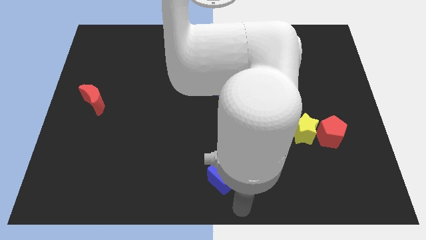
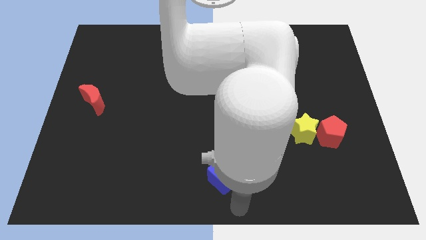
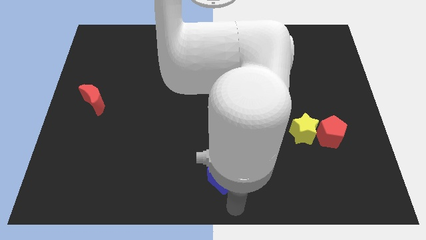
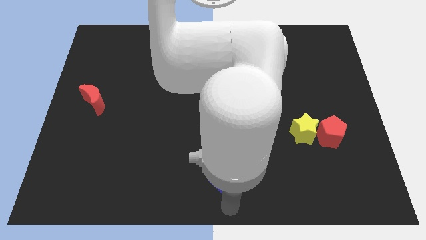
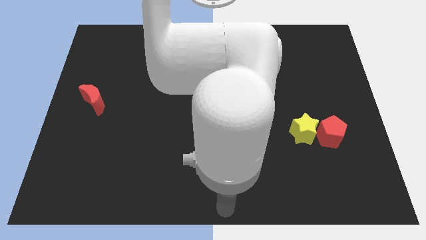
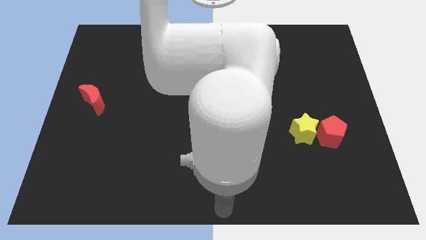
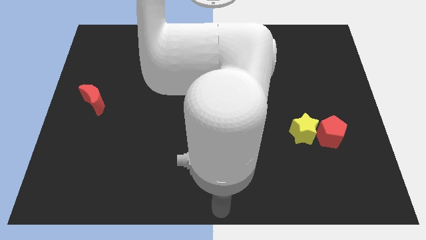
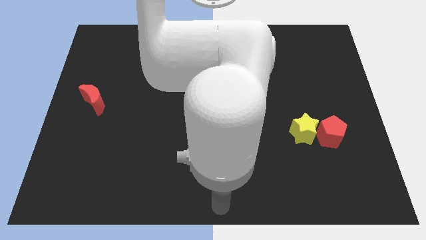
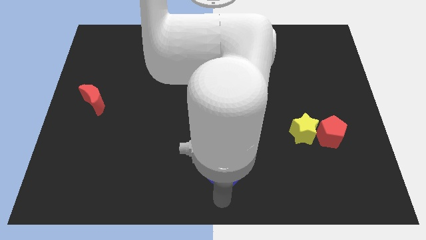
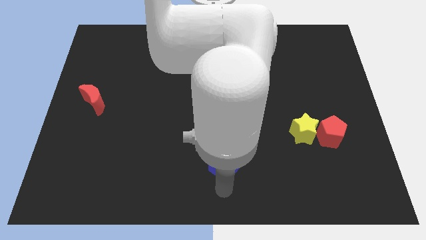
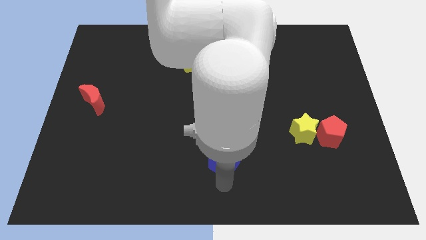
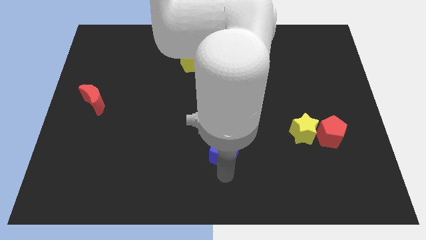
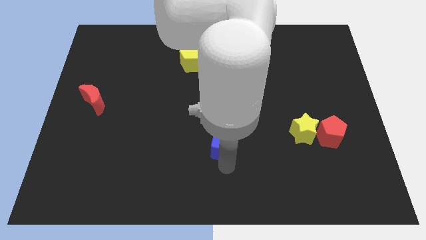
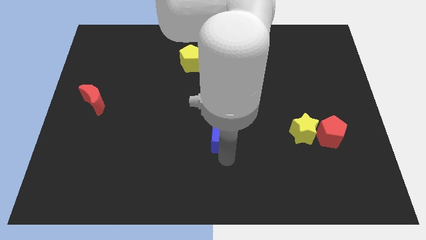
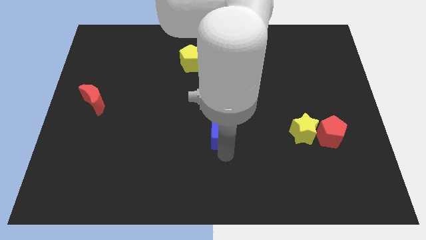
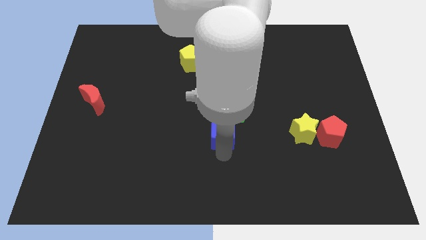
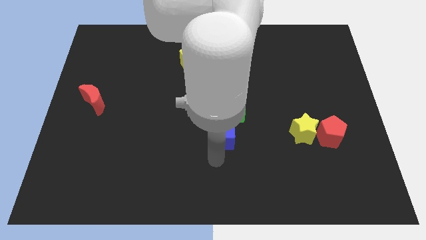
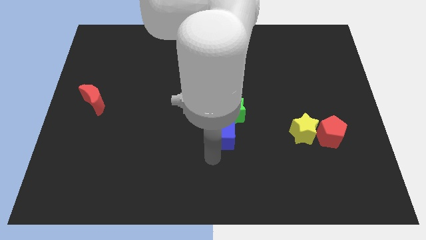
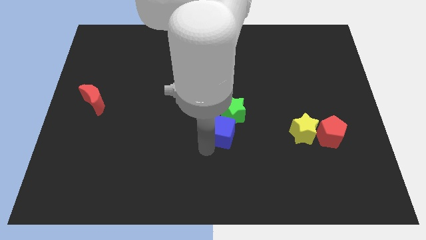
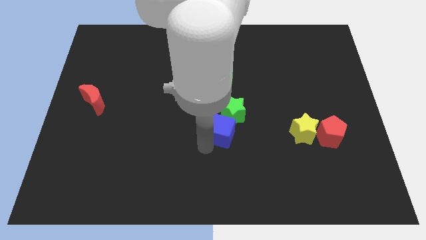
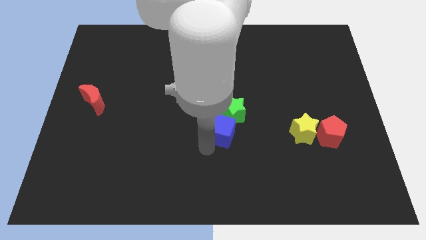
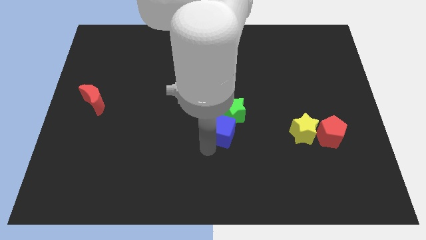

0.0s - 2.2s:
move the blue cube towards upward

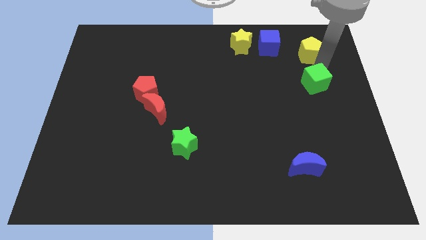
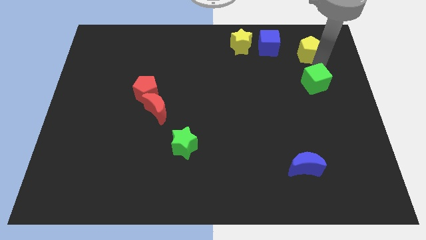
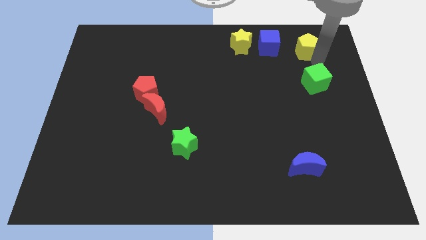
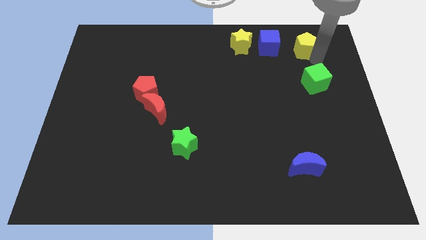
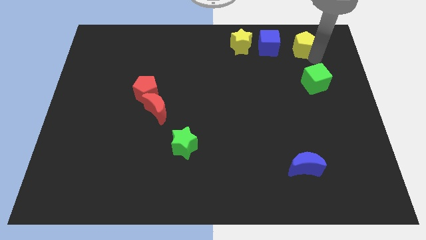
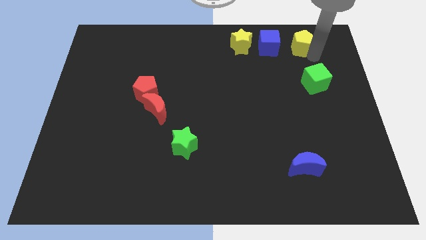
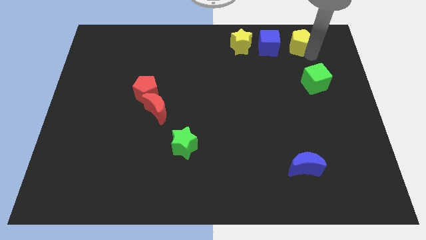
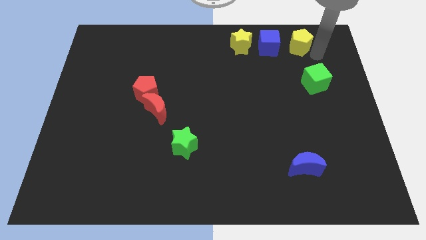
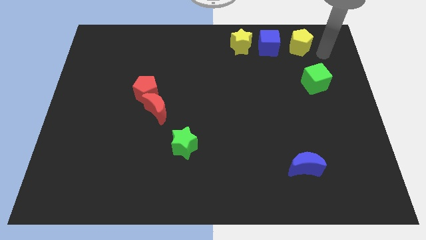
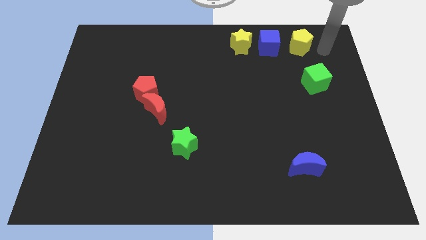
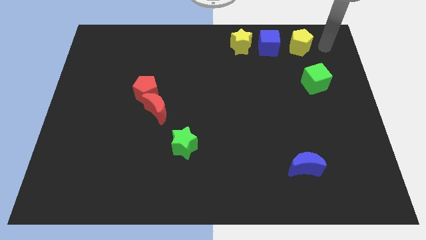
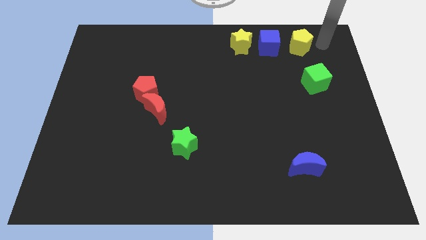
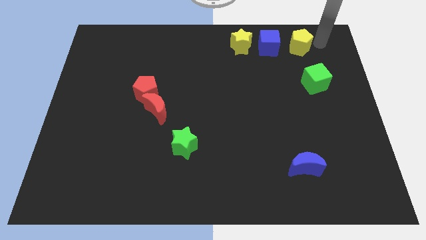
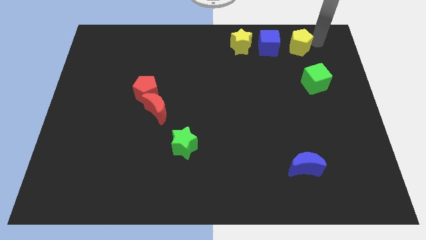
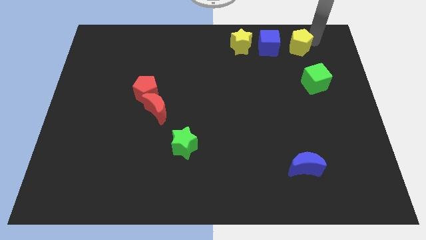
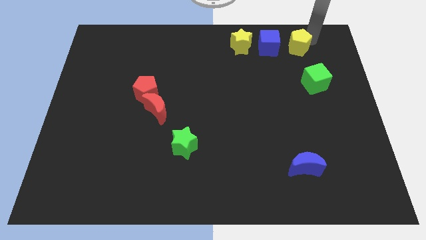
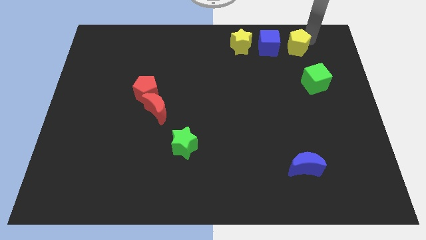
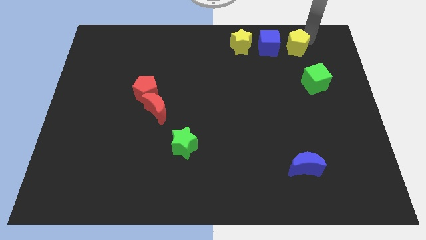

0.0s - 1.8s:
move the yellow pentagon towards the blue cube

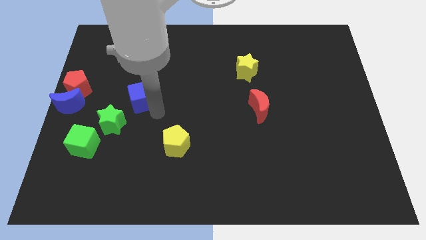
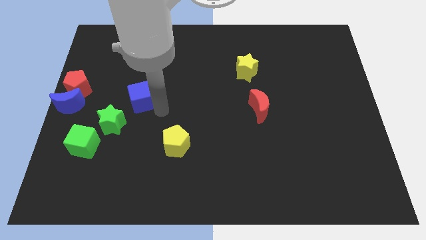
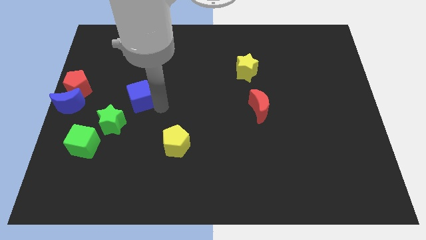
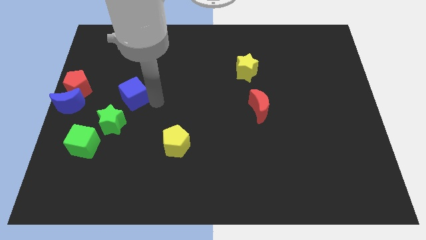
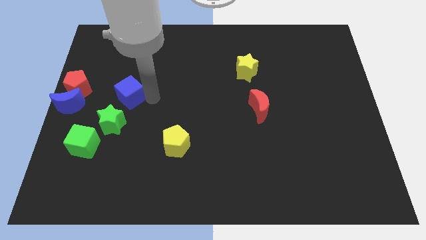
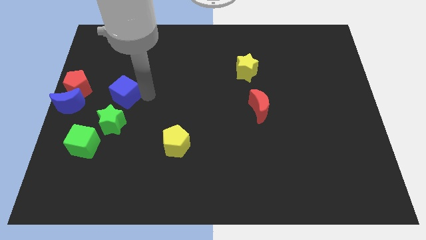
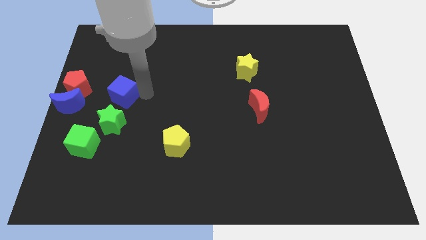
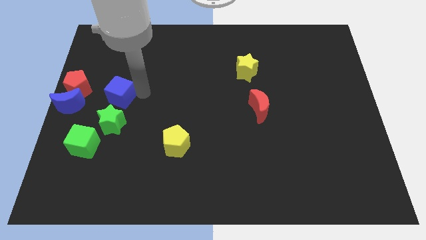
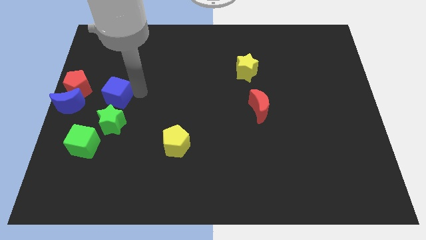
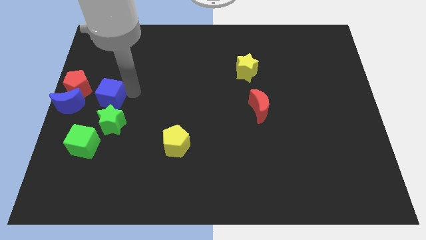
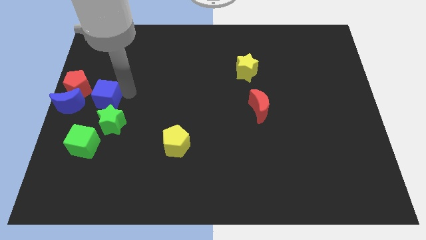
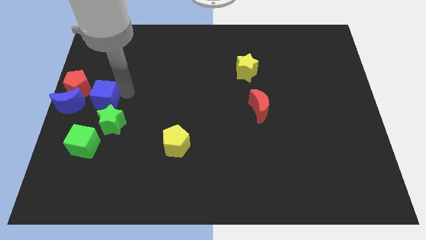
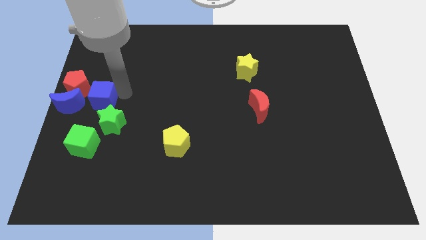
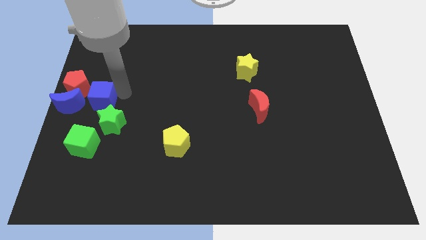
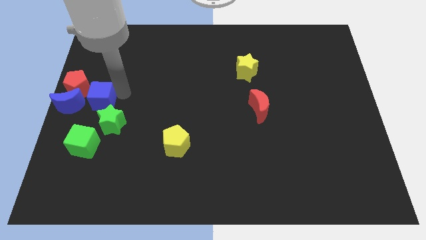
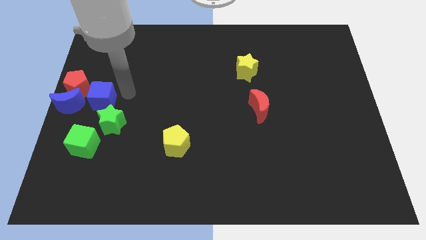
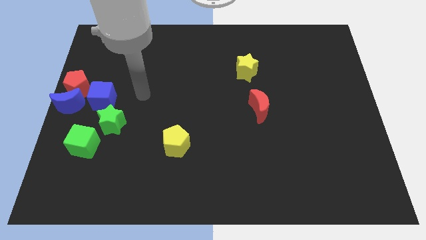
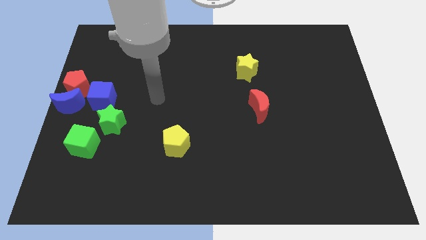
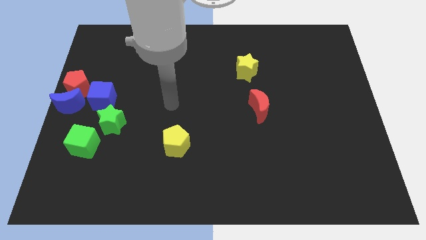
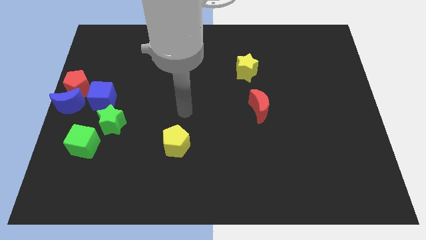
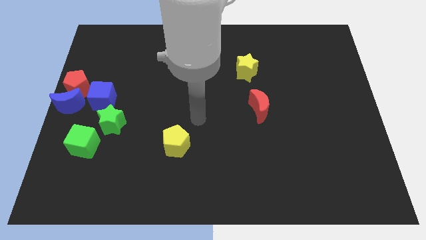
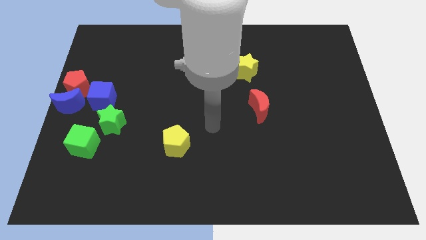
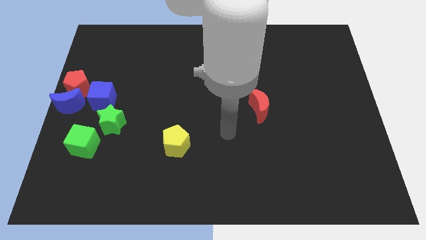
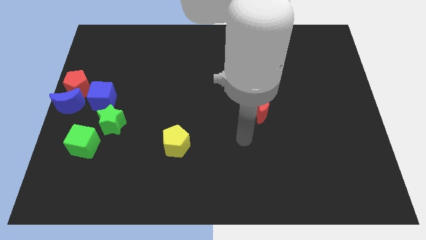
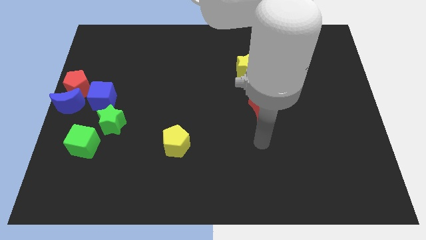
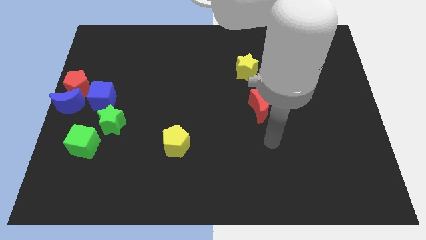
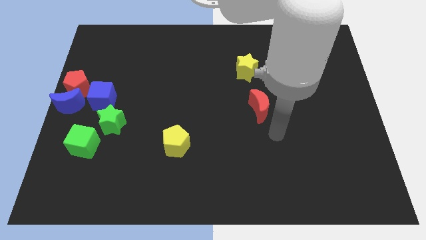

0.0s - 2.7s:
move the blue cube to the right of the blue moon

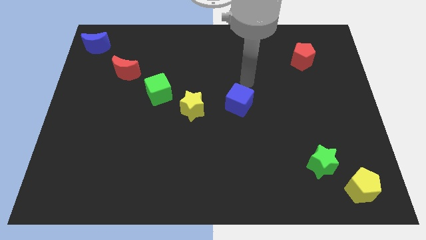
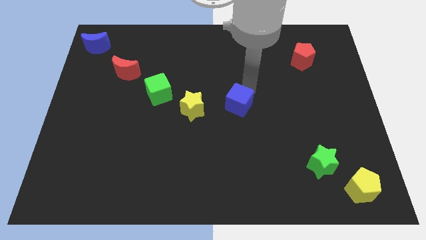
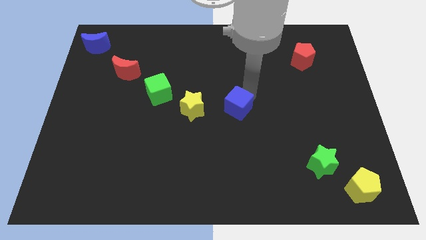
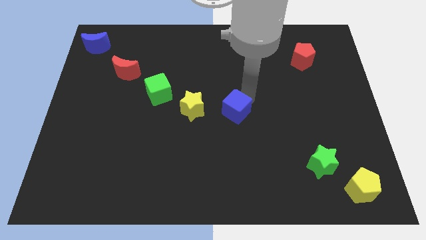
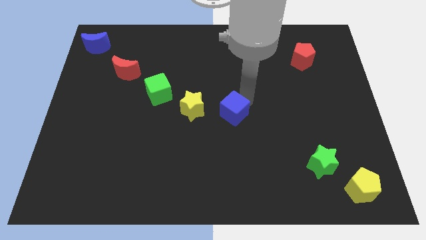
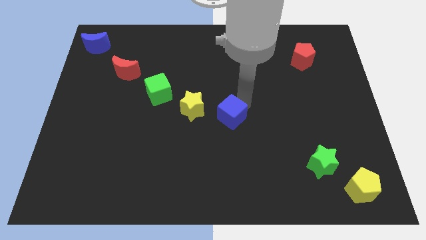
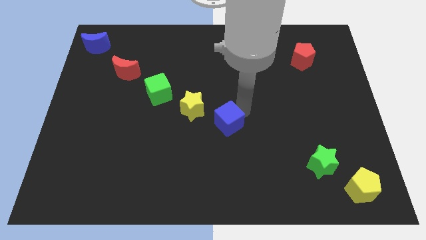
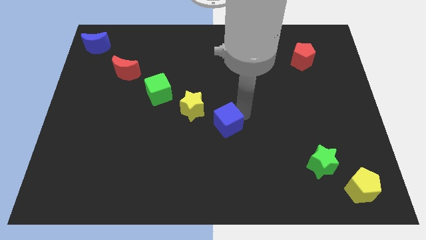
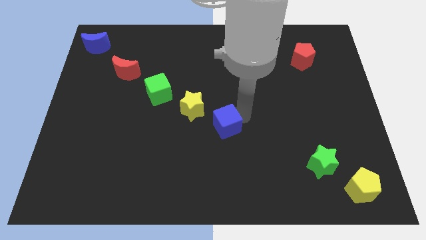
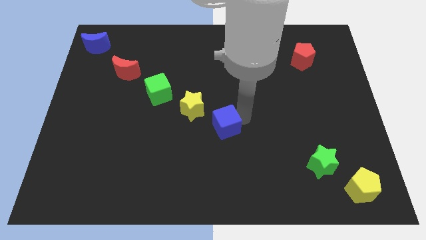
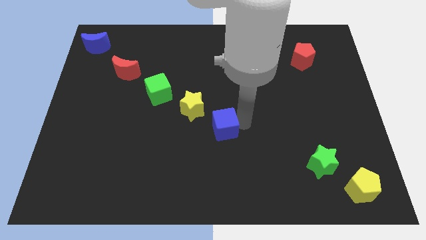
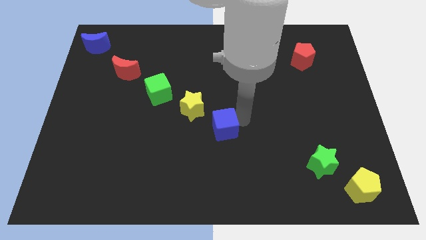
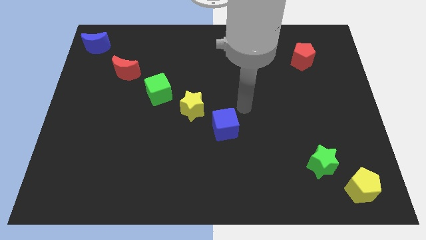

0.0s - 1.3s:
slide the blue cube slightly towards the bottom center side of the board

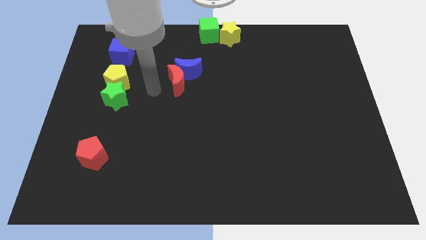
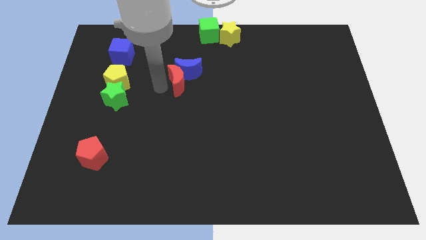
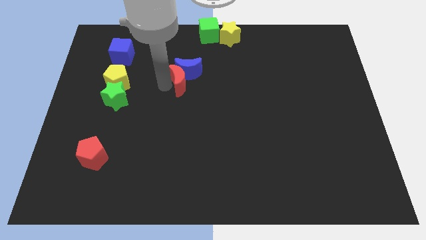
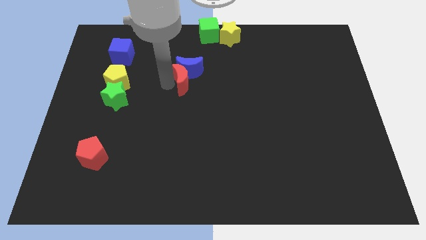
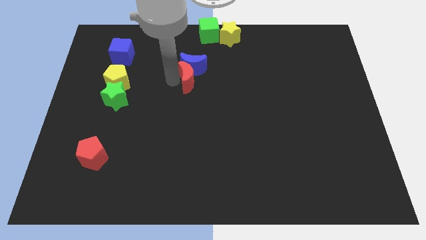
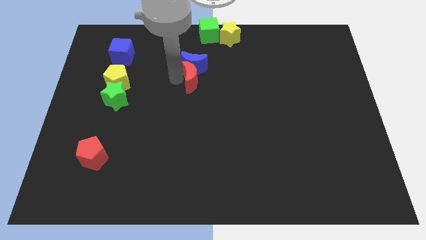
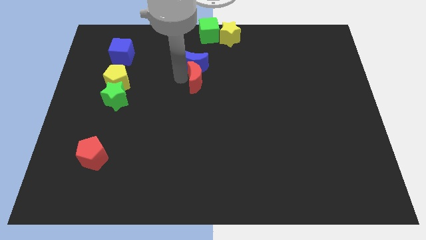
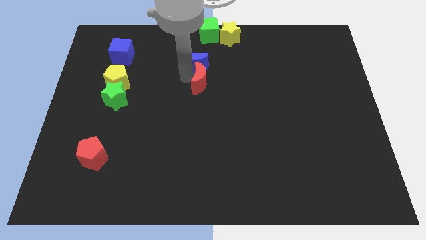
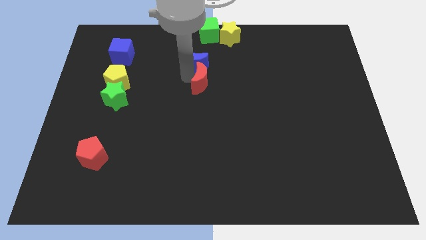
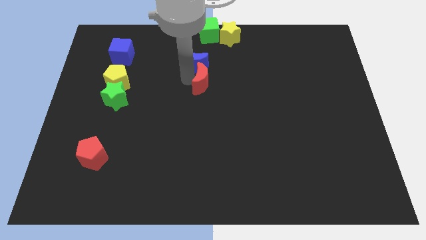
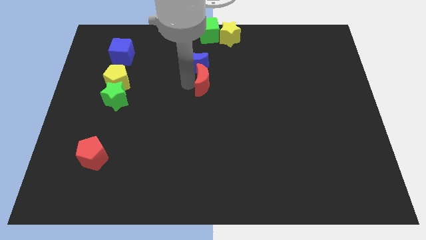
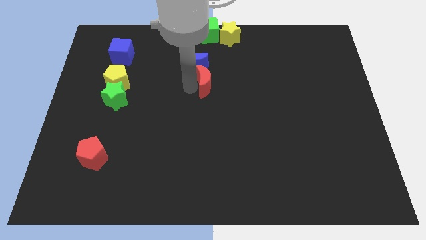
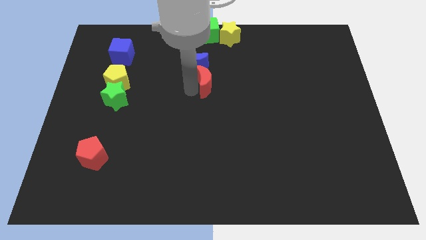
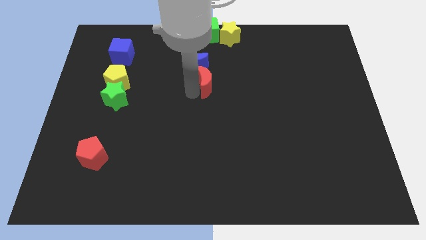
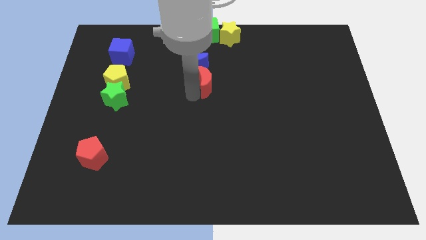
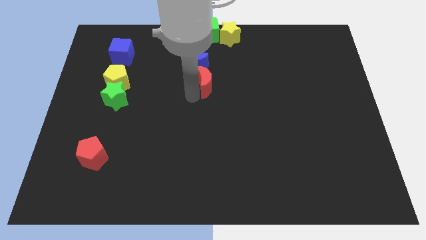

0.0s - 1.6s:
push the red crescent towards the right side of the blue crescent
